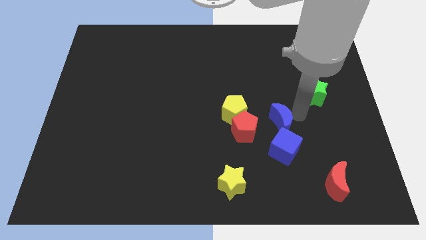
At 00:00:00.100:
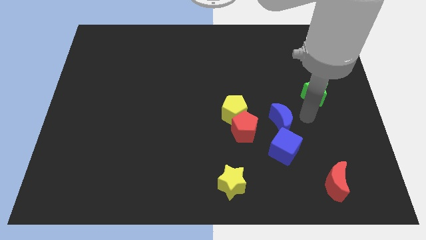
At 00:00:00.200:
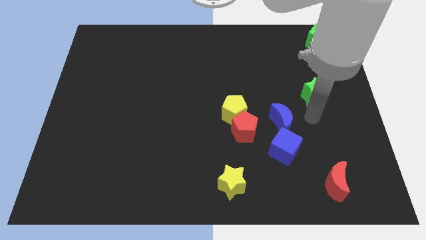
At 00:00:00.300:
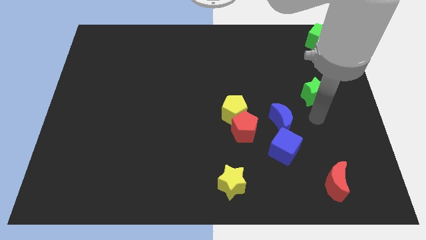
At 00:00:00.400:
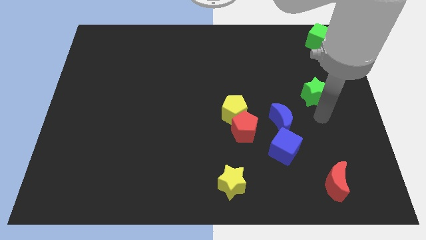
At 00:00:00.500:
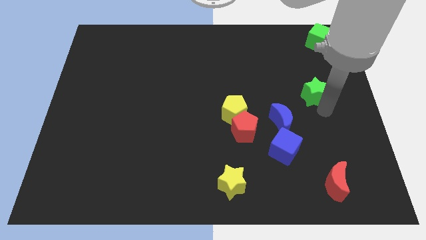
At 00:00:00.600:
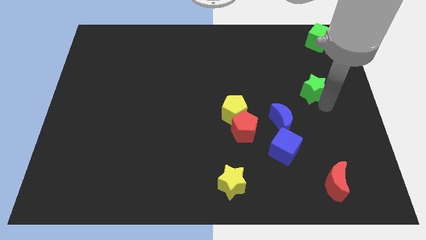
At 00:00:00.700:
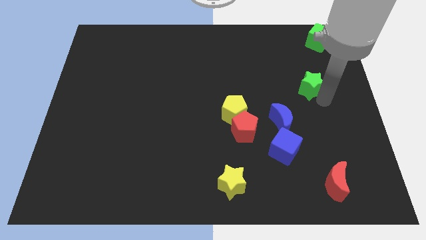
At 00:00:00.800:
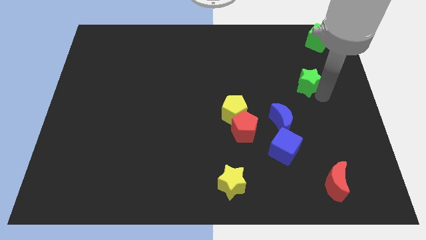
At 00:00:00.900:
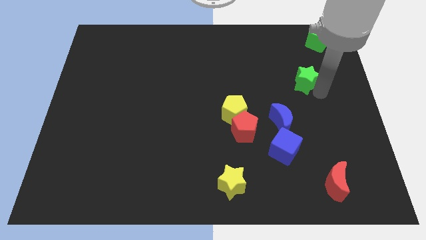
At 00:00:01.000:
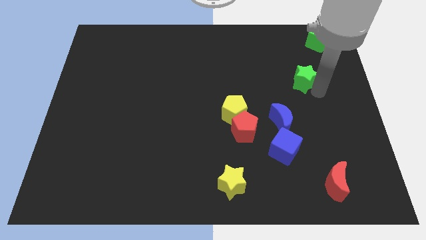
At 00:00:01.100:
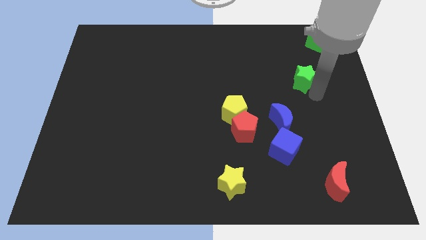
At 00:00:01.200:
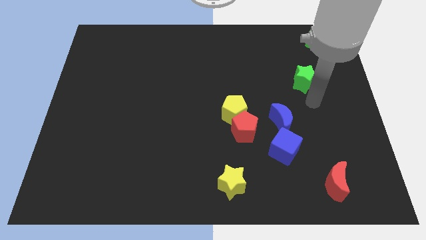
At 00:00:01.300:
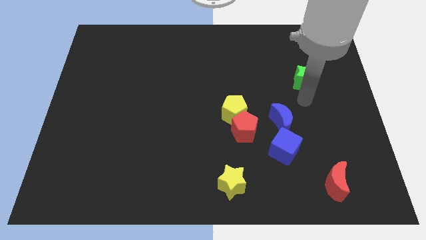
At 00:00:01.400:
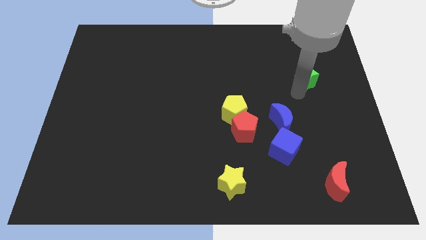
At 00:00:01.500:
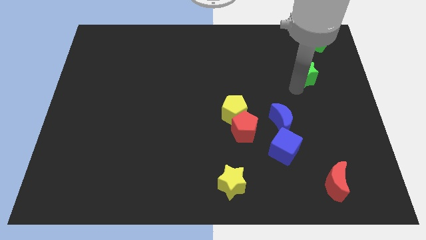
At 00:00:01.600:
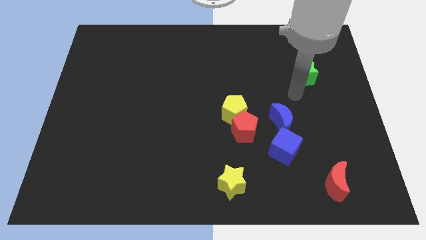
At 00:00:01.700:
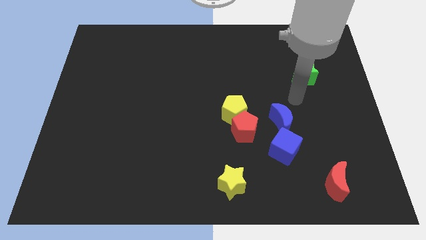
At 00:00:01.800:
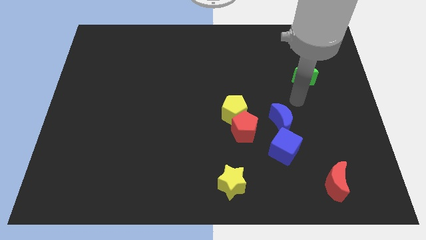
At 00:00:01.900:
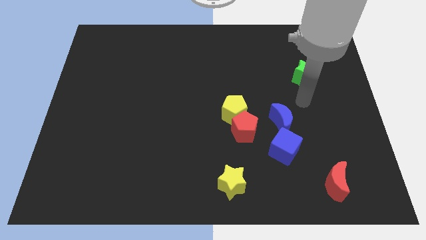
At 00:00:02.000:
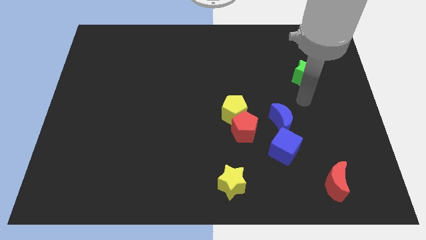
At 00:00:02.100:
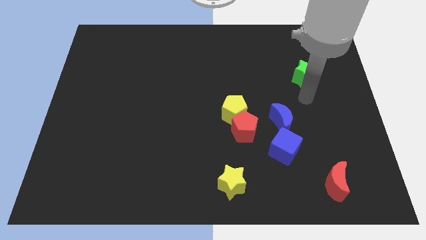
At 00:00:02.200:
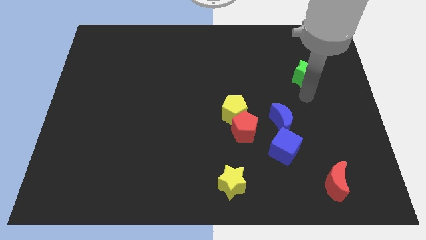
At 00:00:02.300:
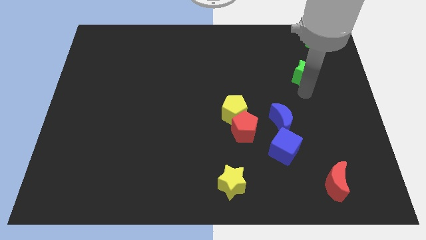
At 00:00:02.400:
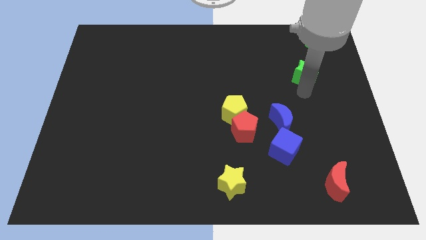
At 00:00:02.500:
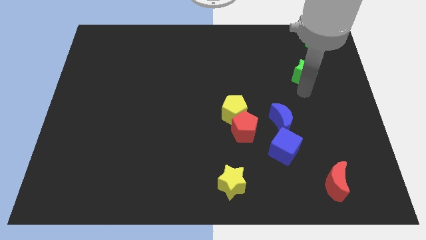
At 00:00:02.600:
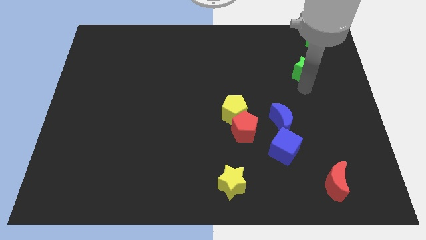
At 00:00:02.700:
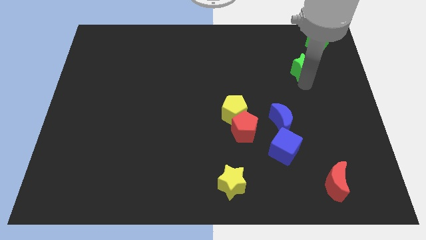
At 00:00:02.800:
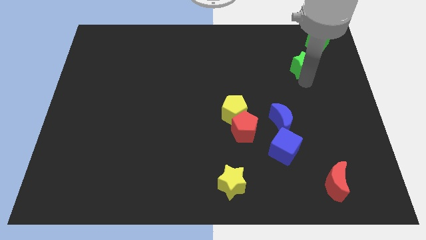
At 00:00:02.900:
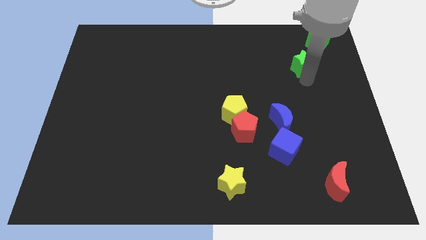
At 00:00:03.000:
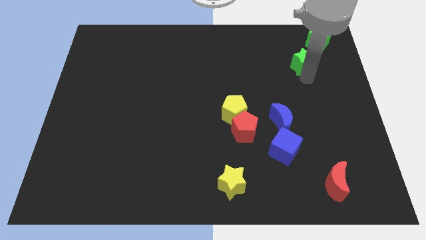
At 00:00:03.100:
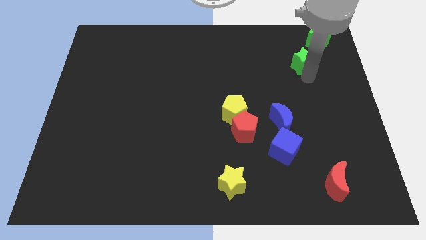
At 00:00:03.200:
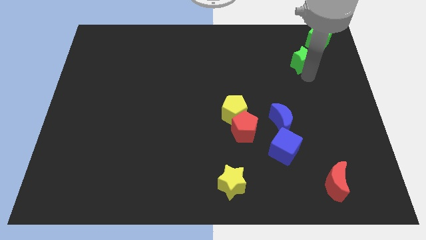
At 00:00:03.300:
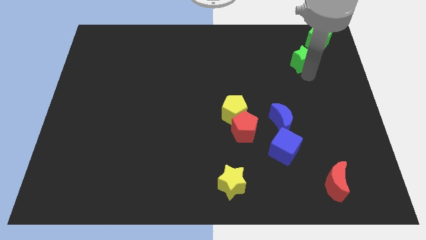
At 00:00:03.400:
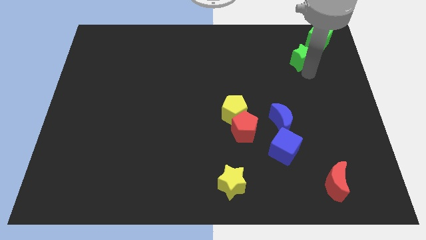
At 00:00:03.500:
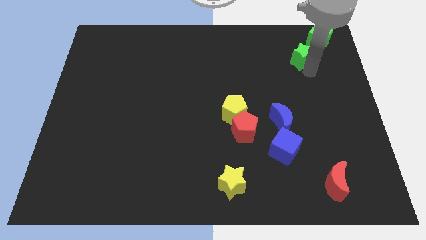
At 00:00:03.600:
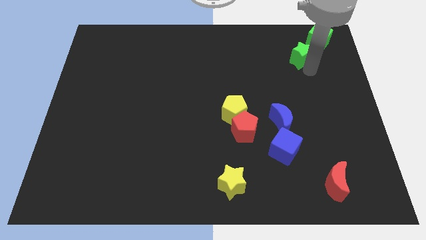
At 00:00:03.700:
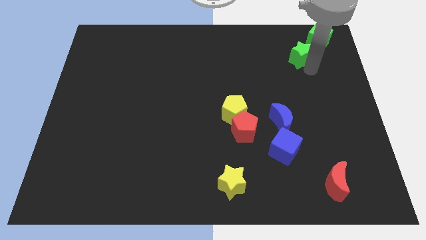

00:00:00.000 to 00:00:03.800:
slide the green star towards the bottom side of the green cube

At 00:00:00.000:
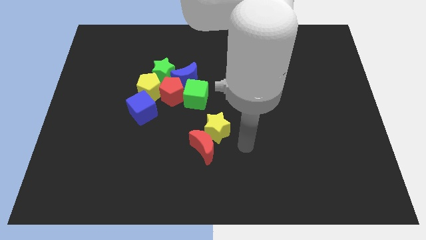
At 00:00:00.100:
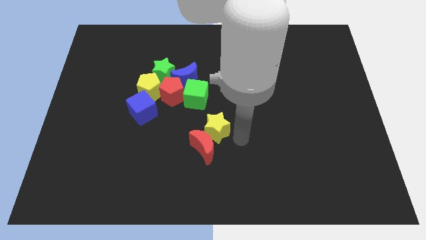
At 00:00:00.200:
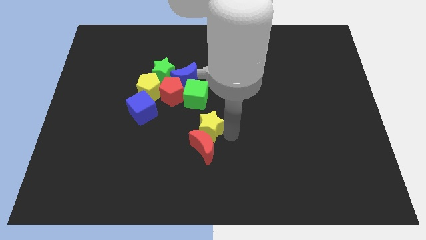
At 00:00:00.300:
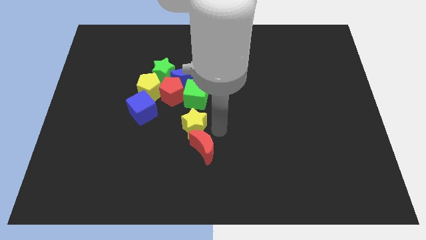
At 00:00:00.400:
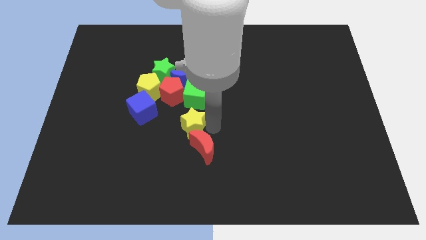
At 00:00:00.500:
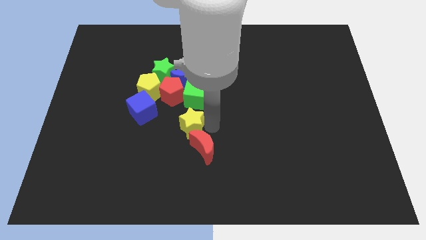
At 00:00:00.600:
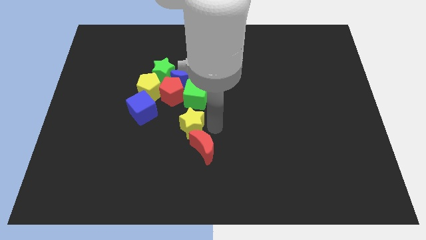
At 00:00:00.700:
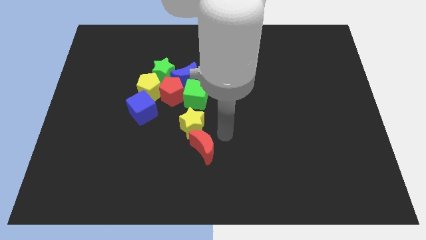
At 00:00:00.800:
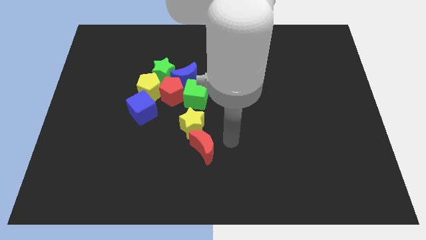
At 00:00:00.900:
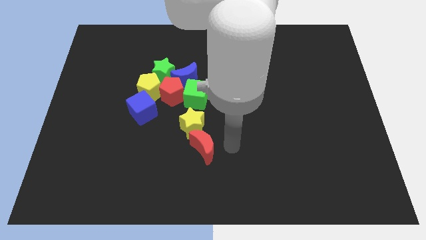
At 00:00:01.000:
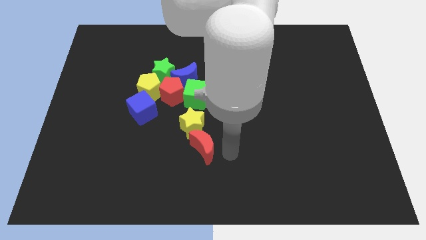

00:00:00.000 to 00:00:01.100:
move the yellow star to the bottom of the green cube

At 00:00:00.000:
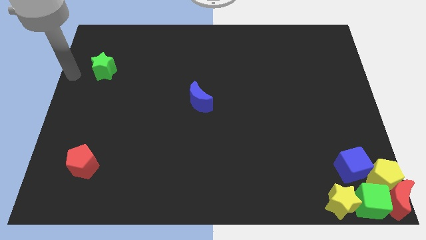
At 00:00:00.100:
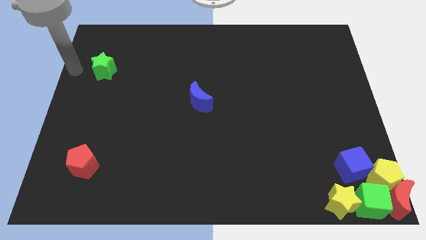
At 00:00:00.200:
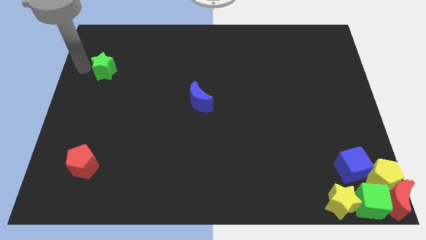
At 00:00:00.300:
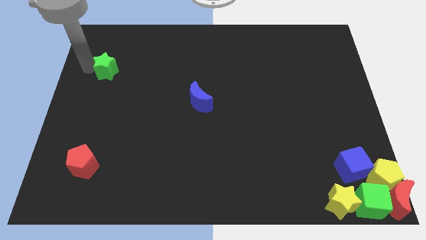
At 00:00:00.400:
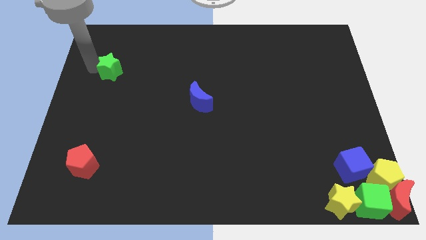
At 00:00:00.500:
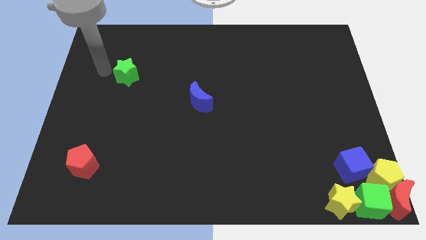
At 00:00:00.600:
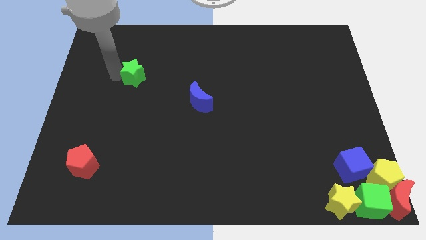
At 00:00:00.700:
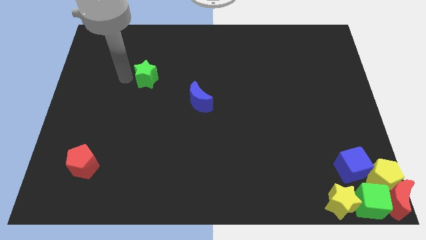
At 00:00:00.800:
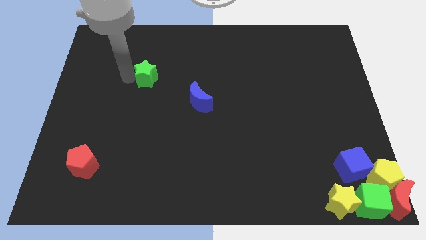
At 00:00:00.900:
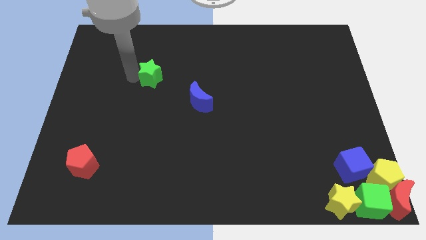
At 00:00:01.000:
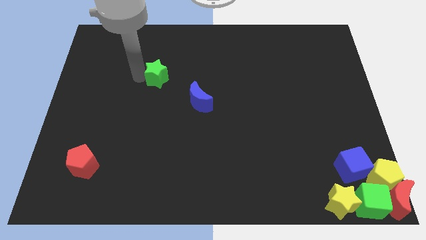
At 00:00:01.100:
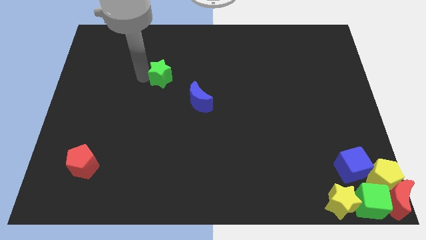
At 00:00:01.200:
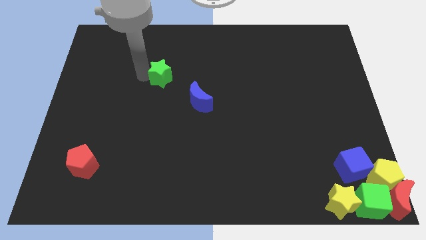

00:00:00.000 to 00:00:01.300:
slide the green star towards the blue moon

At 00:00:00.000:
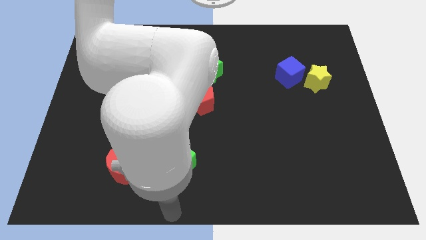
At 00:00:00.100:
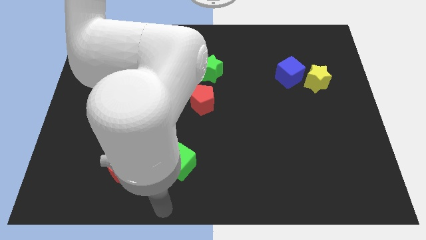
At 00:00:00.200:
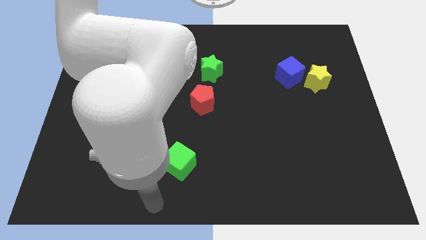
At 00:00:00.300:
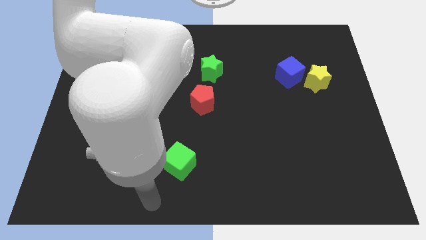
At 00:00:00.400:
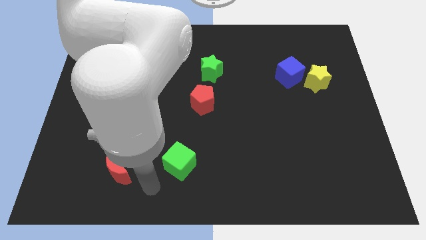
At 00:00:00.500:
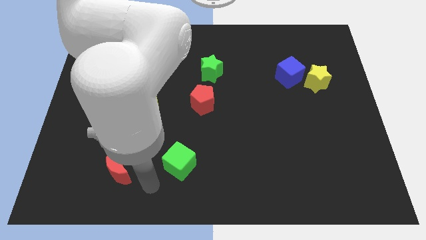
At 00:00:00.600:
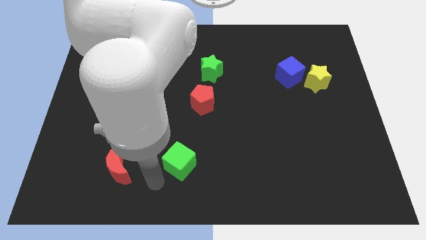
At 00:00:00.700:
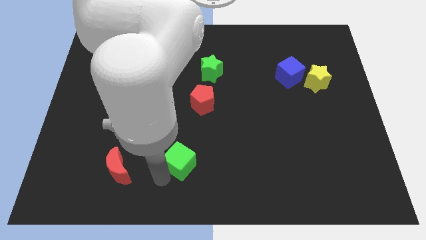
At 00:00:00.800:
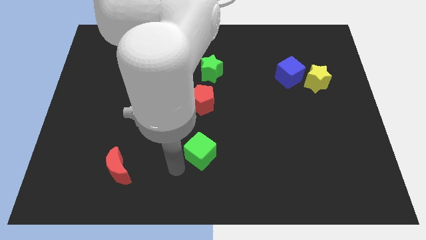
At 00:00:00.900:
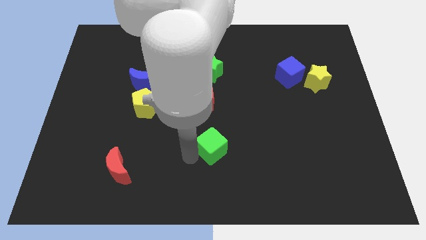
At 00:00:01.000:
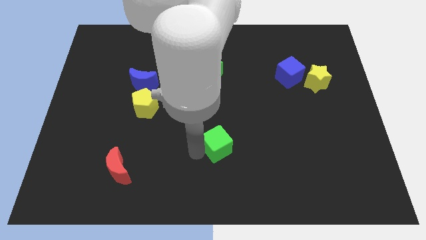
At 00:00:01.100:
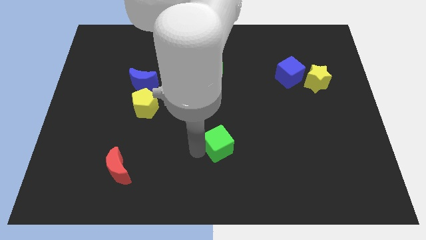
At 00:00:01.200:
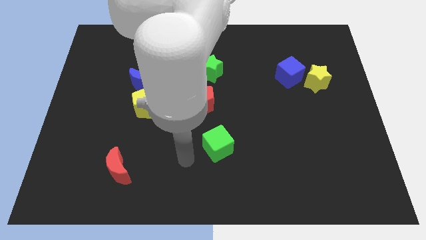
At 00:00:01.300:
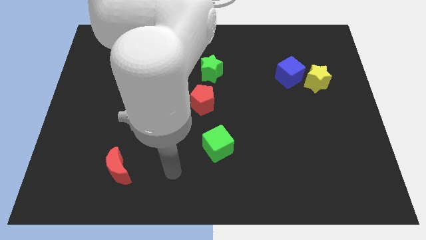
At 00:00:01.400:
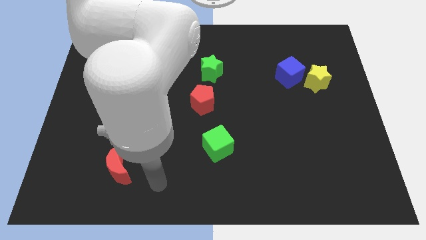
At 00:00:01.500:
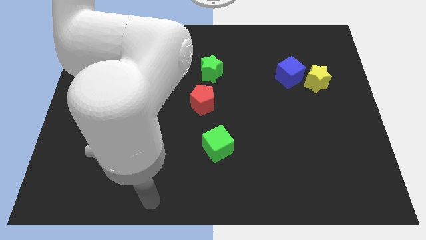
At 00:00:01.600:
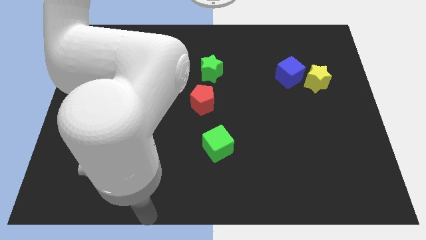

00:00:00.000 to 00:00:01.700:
slightly move the green cube towards the top of the board

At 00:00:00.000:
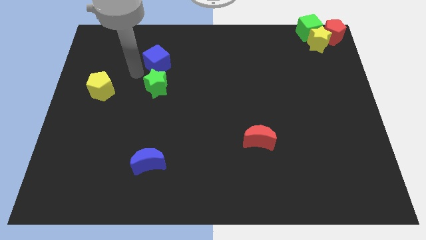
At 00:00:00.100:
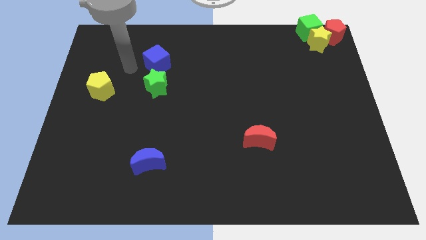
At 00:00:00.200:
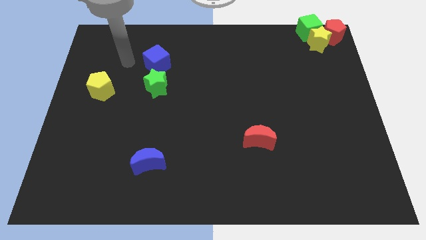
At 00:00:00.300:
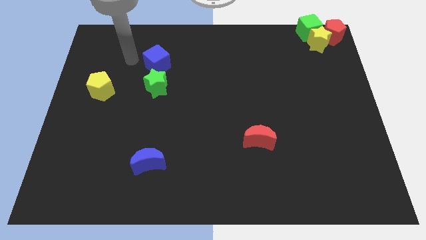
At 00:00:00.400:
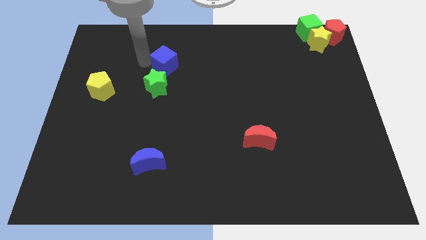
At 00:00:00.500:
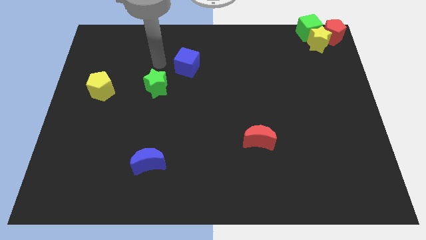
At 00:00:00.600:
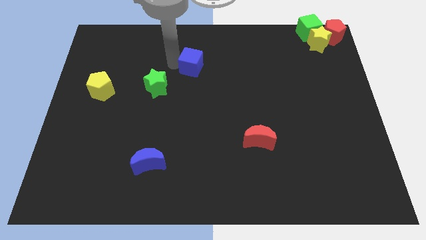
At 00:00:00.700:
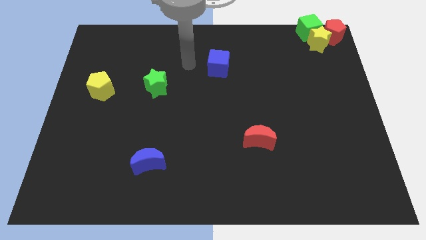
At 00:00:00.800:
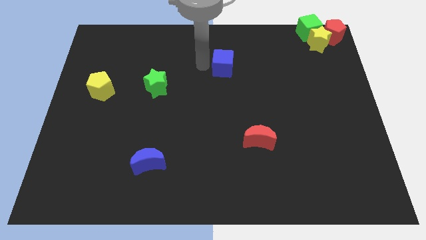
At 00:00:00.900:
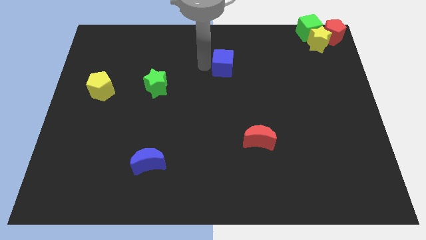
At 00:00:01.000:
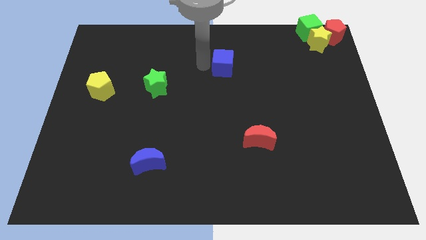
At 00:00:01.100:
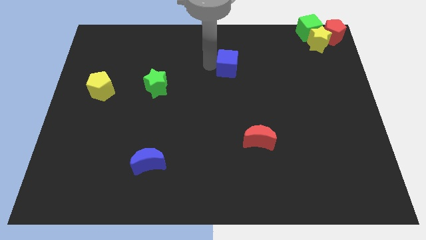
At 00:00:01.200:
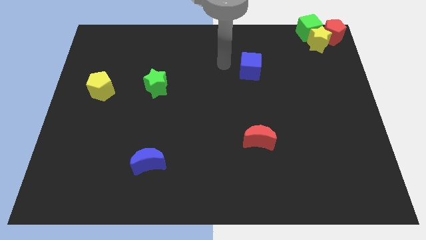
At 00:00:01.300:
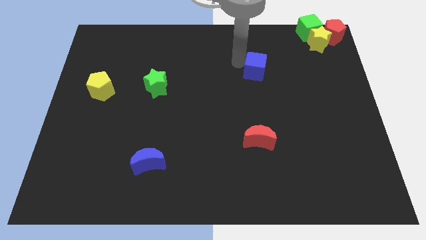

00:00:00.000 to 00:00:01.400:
separate the blue cube from the green star
